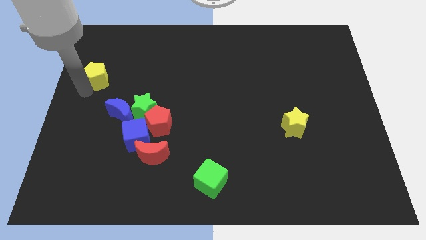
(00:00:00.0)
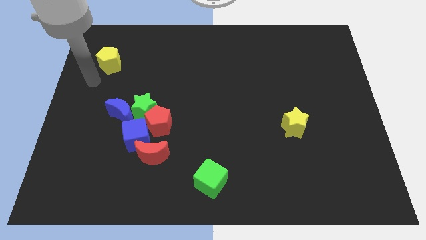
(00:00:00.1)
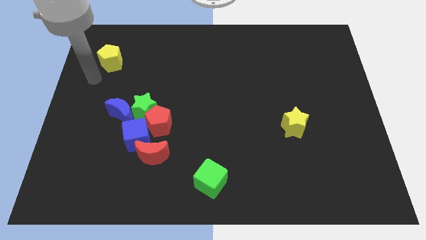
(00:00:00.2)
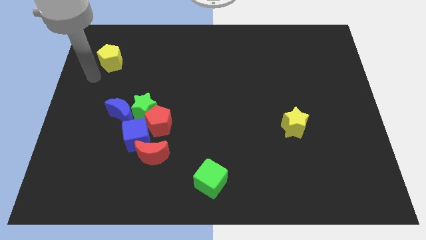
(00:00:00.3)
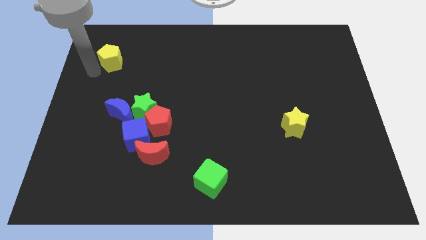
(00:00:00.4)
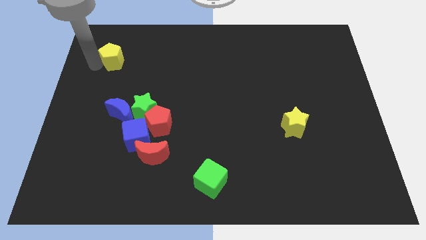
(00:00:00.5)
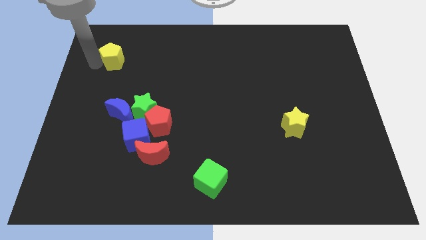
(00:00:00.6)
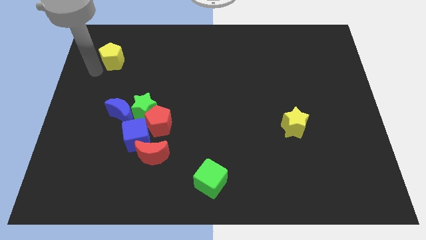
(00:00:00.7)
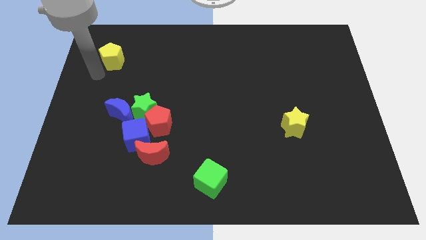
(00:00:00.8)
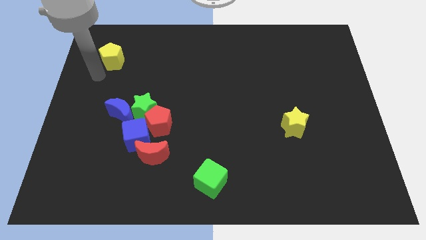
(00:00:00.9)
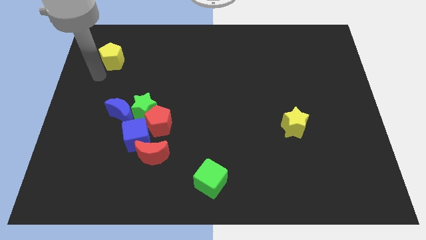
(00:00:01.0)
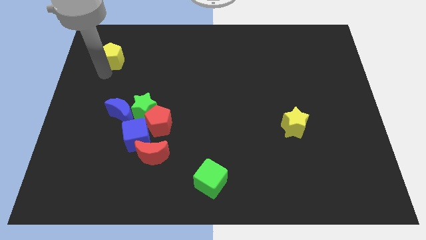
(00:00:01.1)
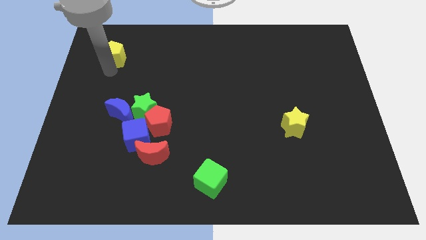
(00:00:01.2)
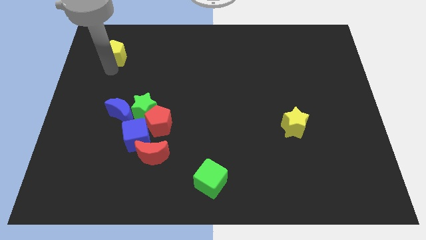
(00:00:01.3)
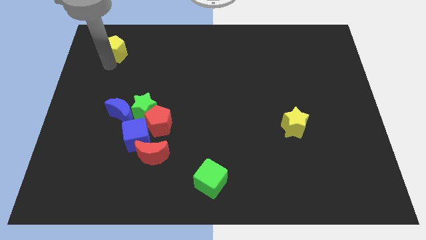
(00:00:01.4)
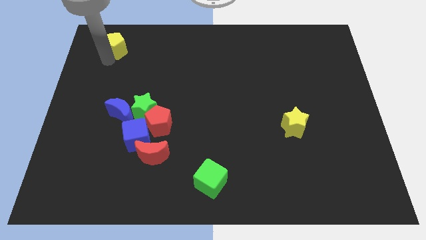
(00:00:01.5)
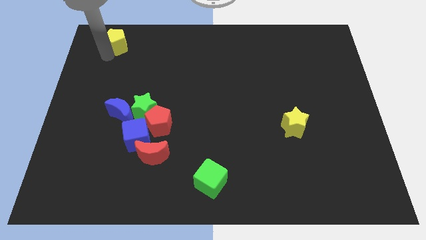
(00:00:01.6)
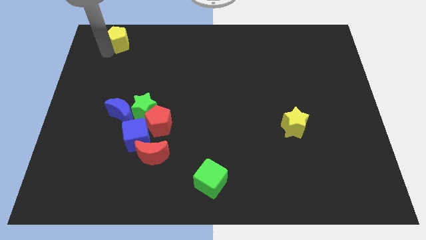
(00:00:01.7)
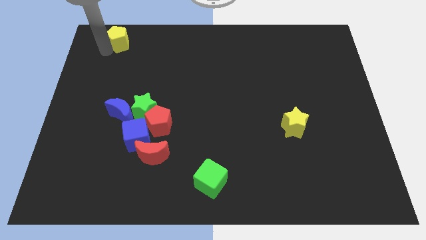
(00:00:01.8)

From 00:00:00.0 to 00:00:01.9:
move the yellow pentagon to the top left of the board

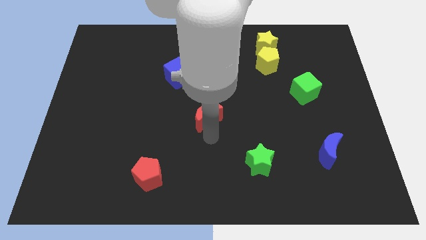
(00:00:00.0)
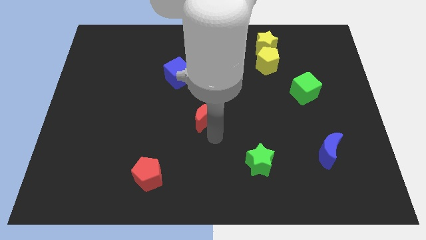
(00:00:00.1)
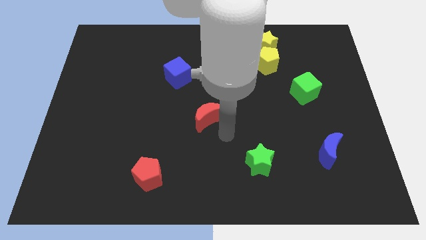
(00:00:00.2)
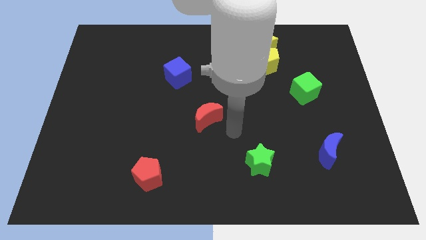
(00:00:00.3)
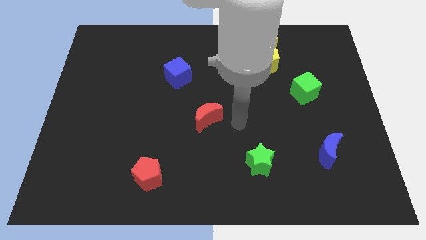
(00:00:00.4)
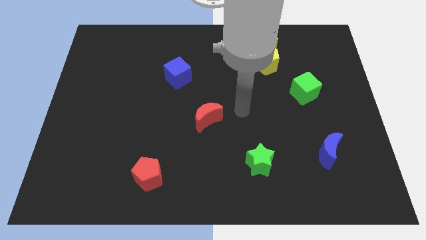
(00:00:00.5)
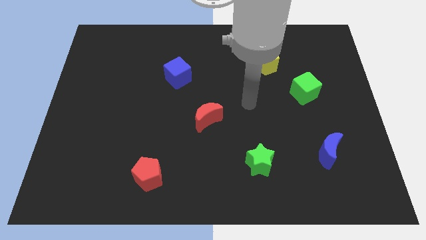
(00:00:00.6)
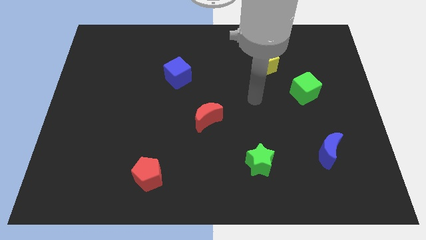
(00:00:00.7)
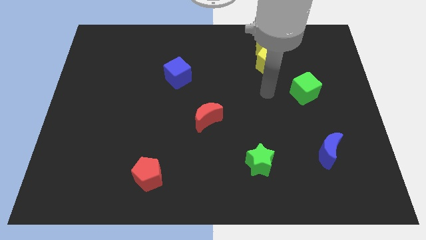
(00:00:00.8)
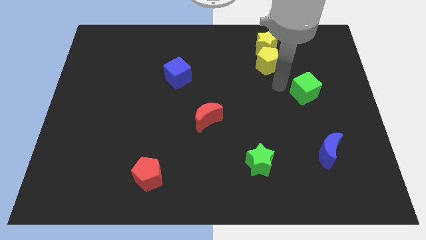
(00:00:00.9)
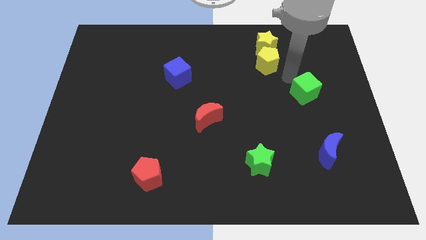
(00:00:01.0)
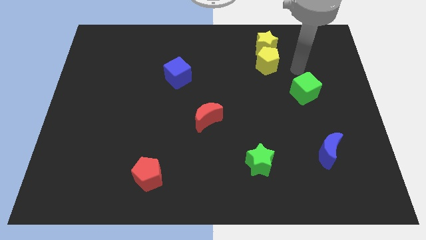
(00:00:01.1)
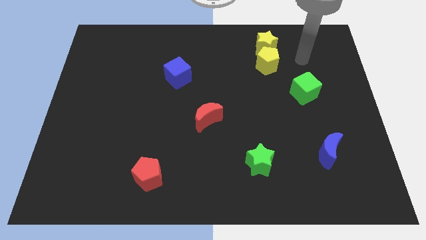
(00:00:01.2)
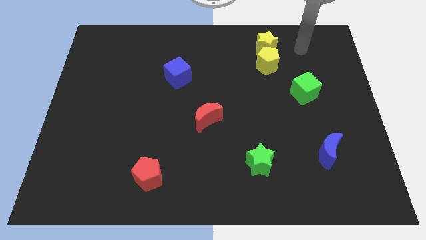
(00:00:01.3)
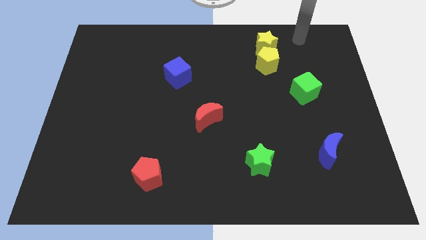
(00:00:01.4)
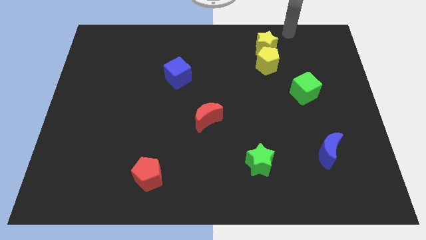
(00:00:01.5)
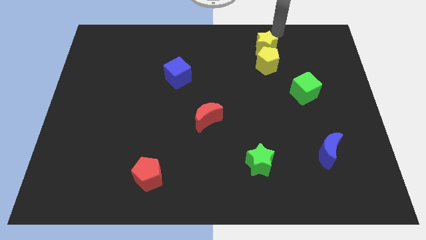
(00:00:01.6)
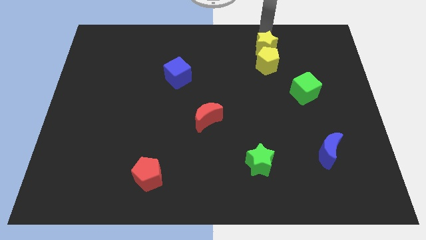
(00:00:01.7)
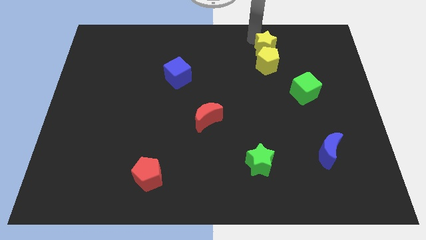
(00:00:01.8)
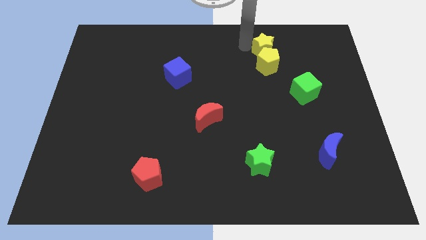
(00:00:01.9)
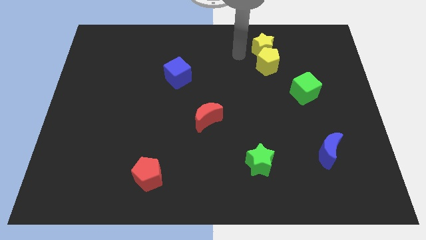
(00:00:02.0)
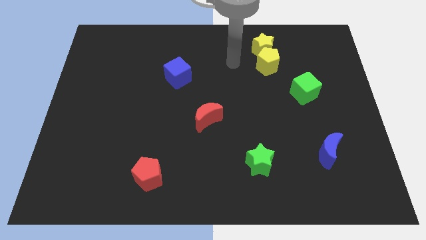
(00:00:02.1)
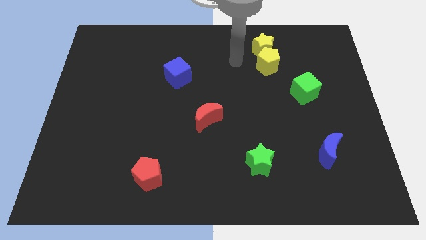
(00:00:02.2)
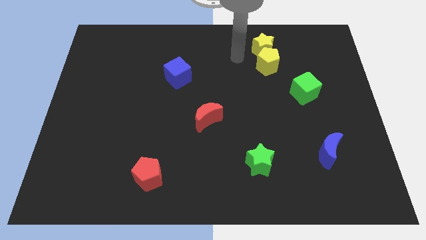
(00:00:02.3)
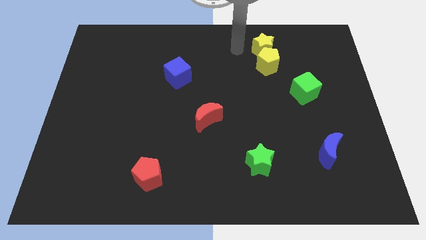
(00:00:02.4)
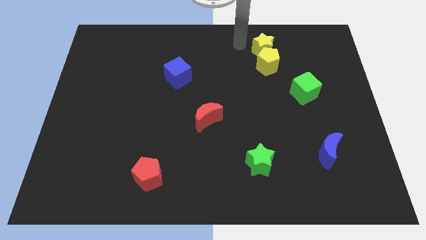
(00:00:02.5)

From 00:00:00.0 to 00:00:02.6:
slightly touch the yellow star

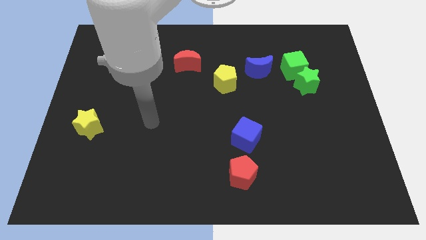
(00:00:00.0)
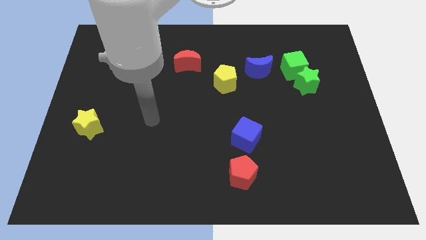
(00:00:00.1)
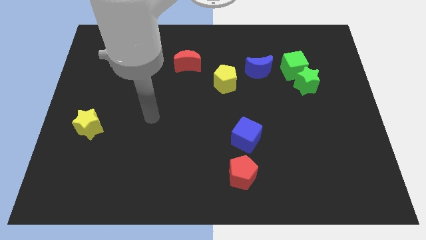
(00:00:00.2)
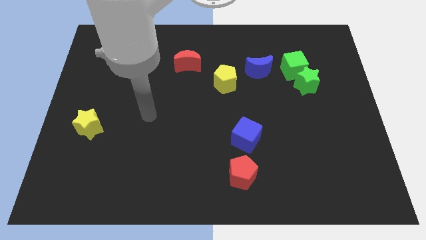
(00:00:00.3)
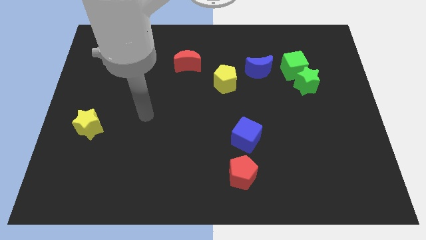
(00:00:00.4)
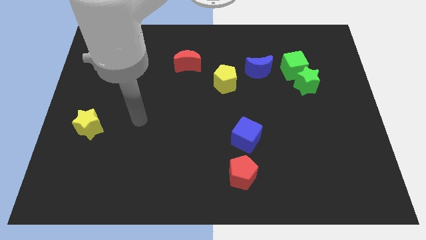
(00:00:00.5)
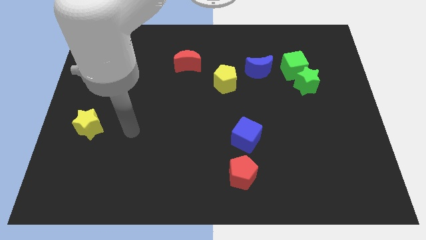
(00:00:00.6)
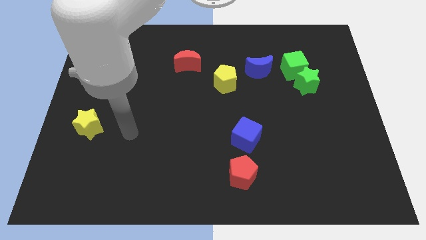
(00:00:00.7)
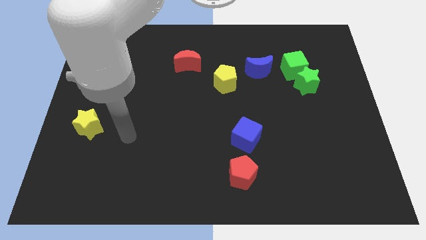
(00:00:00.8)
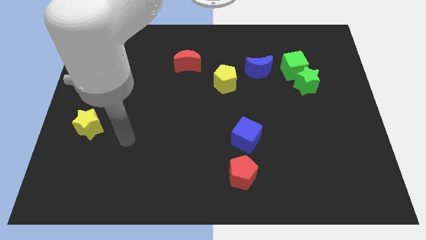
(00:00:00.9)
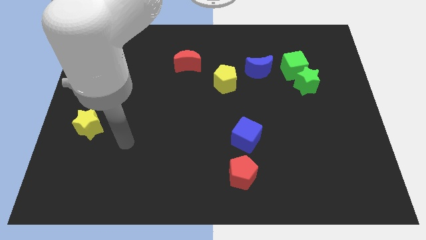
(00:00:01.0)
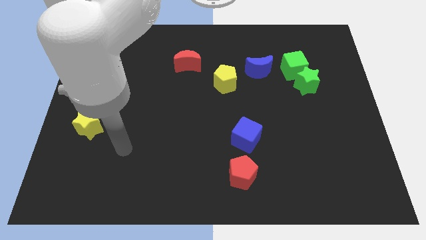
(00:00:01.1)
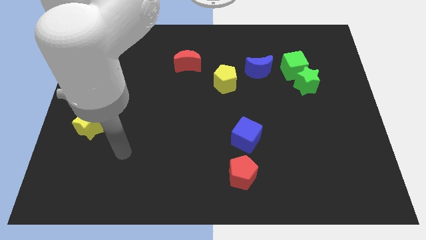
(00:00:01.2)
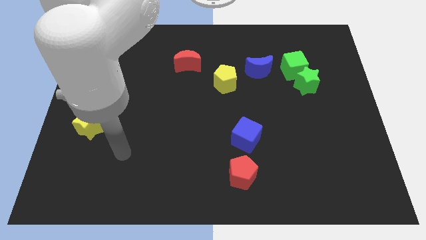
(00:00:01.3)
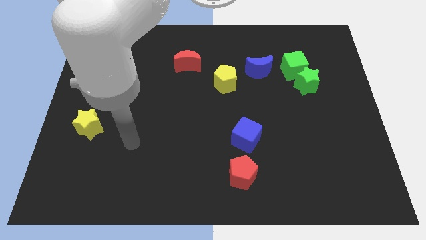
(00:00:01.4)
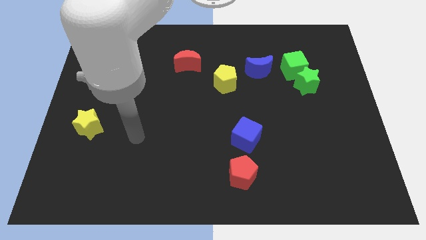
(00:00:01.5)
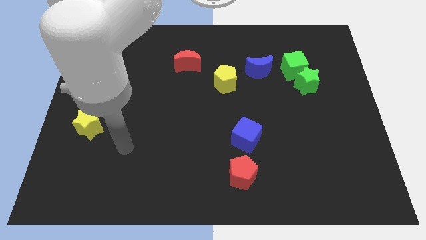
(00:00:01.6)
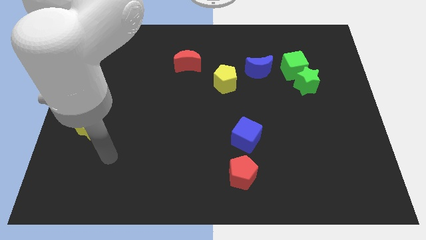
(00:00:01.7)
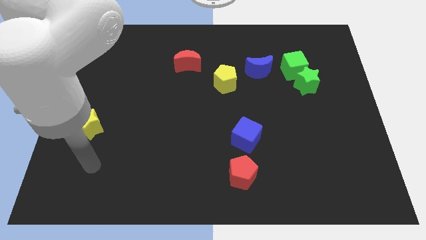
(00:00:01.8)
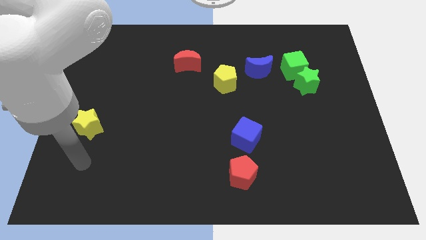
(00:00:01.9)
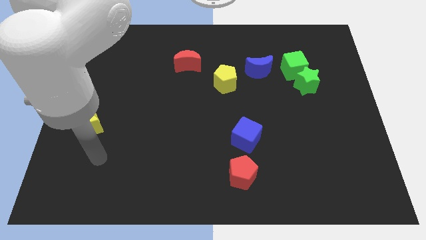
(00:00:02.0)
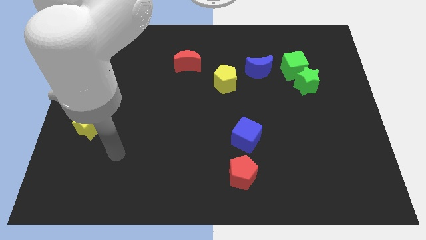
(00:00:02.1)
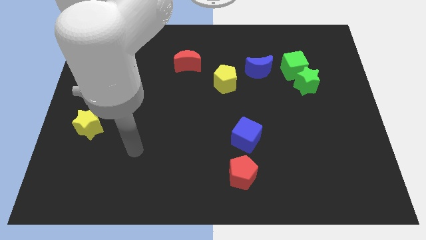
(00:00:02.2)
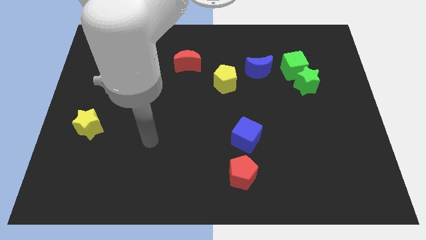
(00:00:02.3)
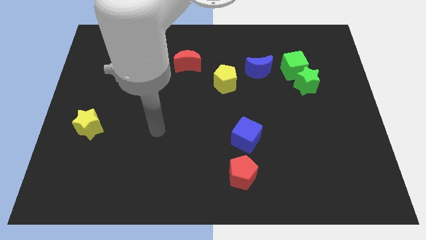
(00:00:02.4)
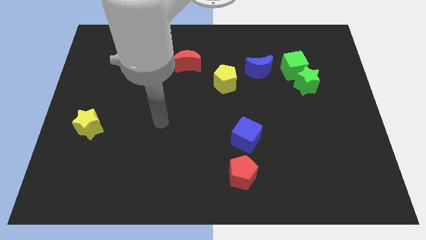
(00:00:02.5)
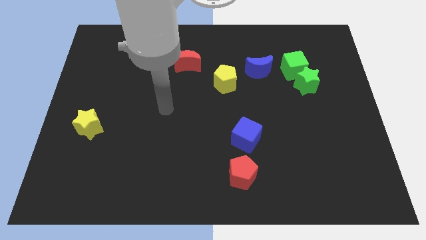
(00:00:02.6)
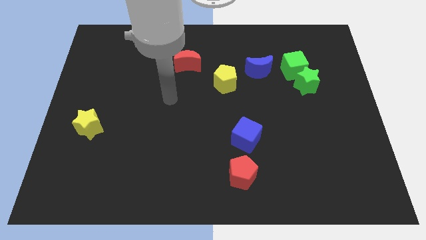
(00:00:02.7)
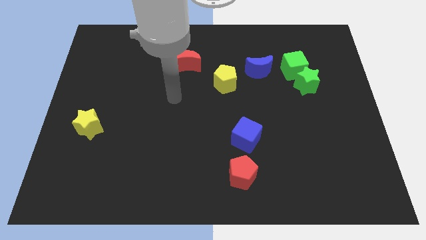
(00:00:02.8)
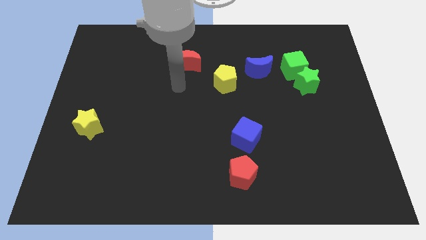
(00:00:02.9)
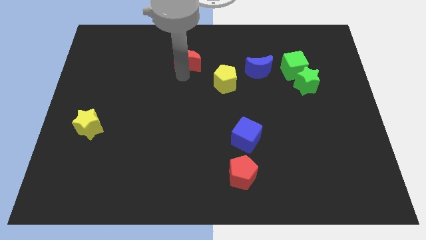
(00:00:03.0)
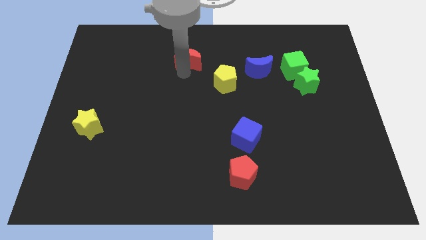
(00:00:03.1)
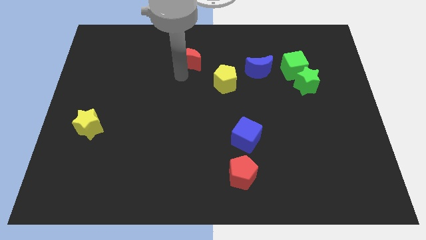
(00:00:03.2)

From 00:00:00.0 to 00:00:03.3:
touch the bottom side of the red moon

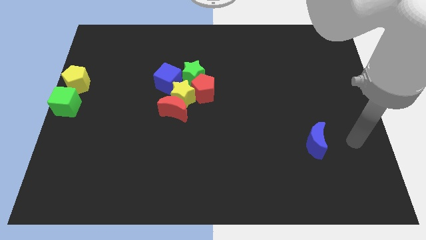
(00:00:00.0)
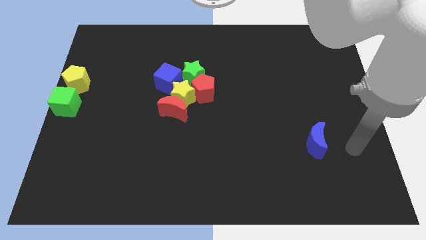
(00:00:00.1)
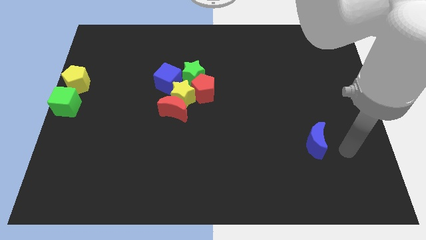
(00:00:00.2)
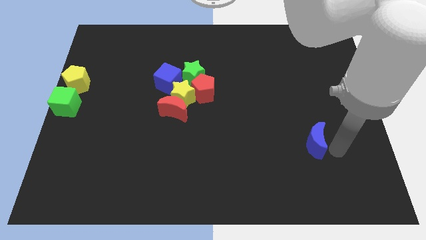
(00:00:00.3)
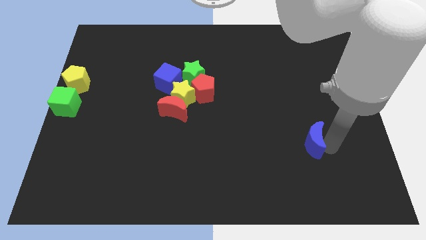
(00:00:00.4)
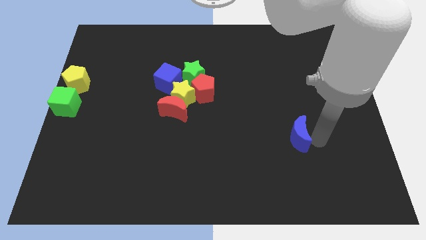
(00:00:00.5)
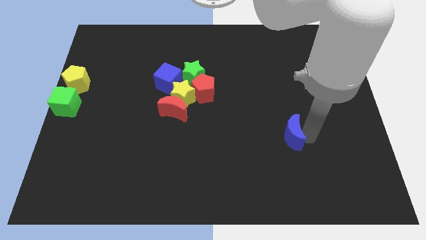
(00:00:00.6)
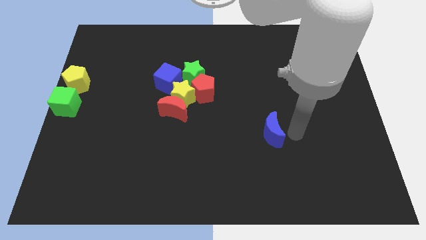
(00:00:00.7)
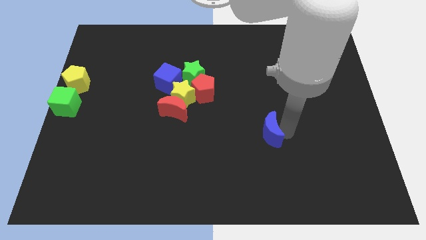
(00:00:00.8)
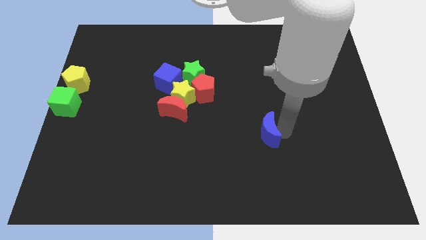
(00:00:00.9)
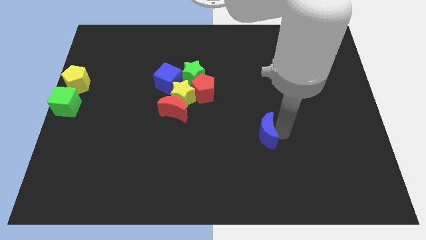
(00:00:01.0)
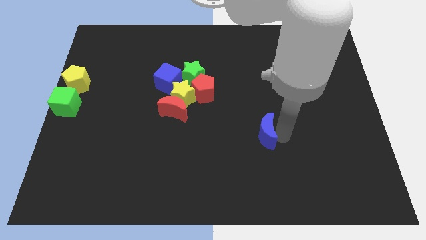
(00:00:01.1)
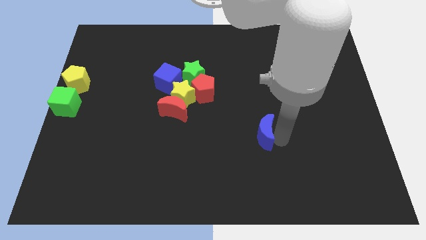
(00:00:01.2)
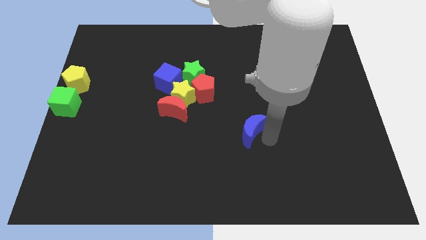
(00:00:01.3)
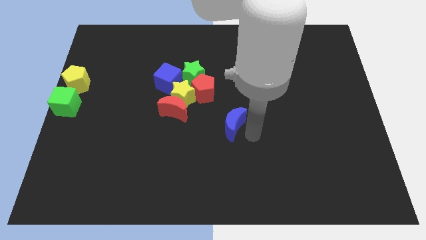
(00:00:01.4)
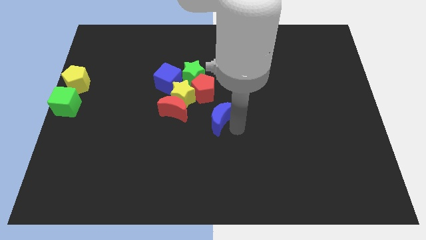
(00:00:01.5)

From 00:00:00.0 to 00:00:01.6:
move blue crescent towards the center of the board
